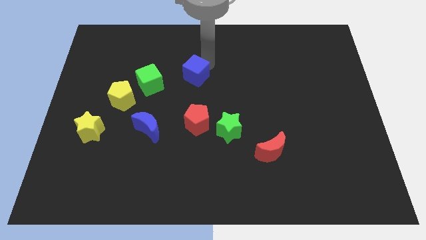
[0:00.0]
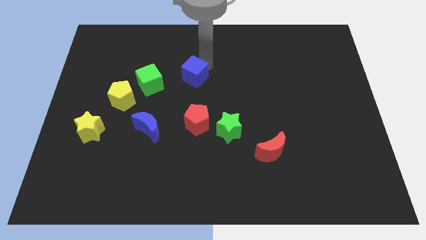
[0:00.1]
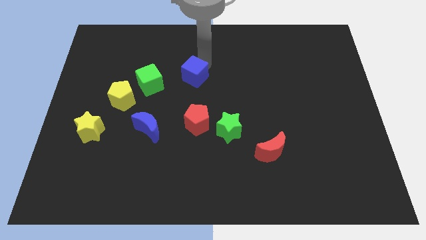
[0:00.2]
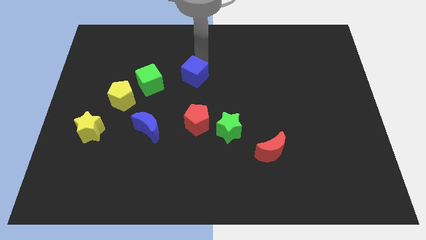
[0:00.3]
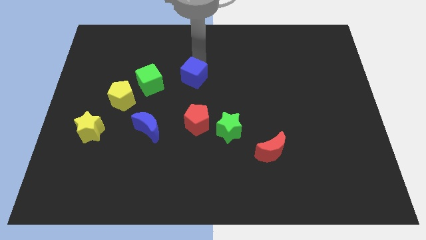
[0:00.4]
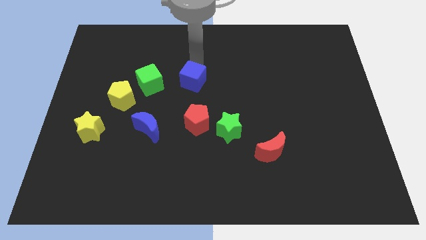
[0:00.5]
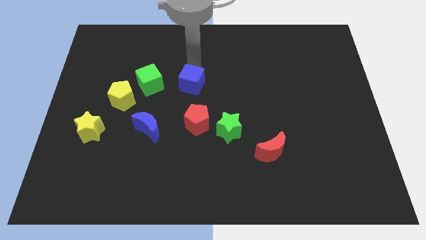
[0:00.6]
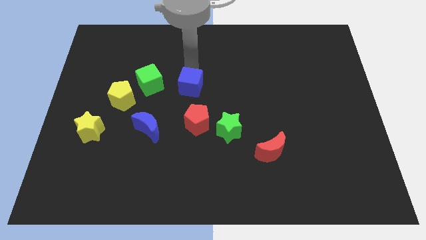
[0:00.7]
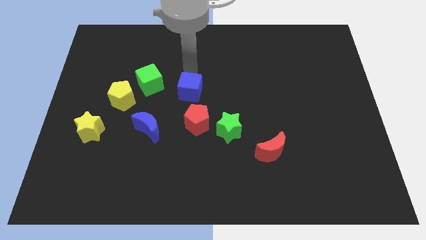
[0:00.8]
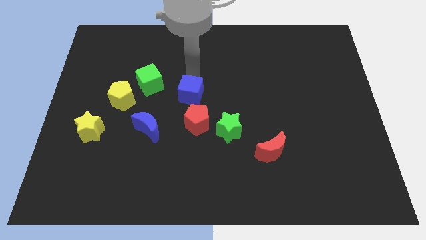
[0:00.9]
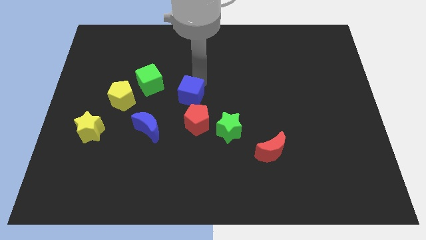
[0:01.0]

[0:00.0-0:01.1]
slightly move the blue cube towards bottom

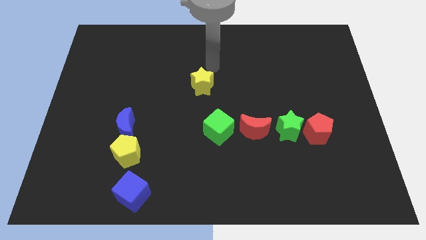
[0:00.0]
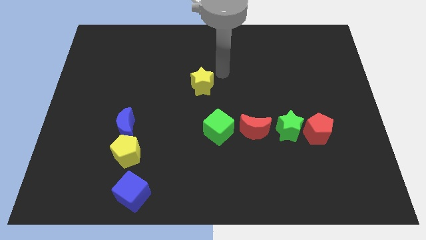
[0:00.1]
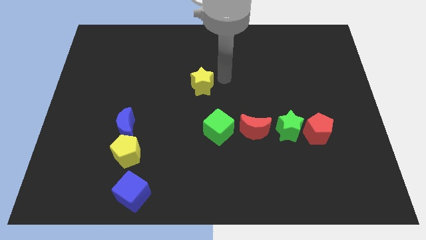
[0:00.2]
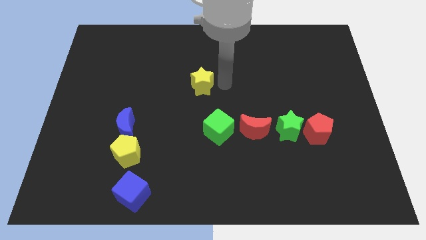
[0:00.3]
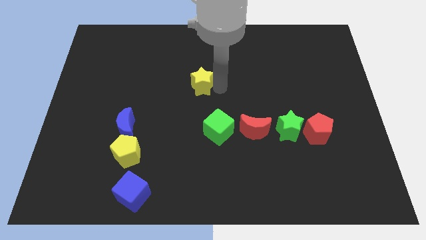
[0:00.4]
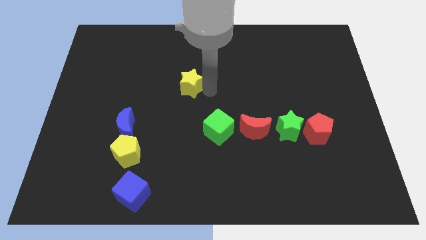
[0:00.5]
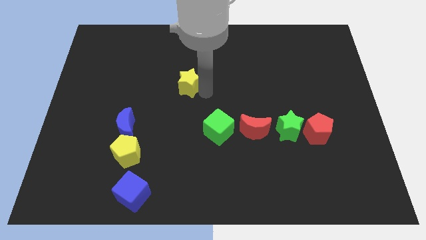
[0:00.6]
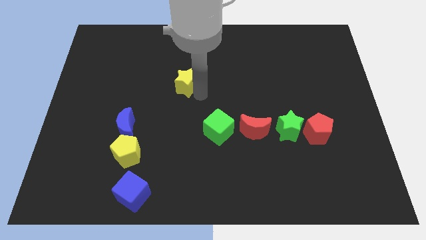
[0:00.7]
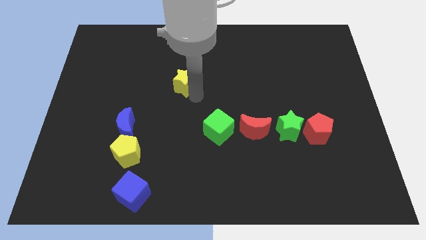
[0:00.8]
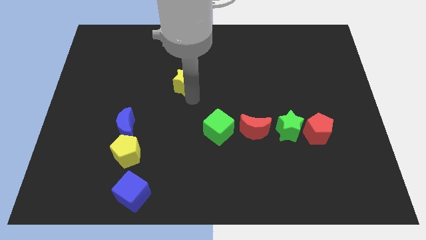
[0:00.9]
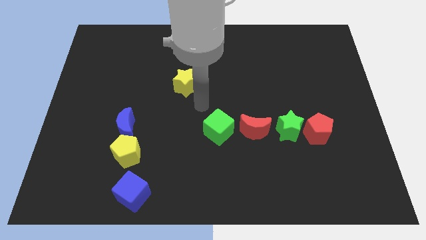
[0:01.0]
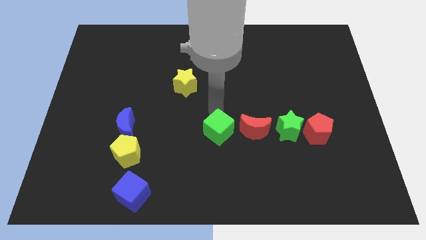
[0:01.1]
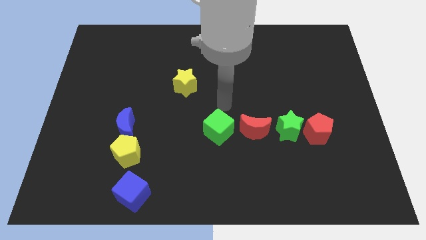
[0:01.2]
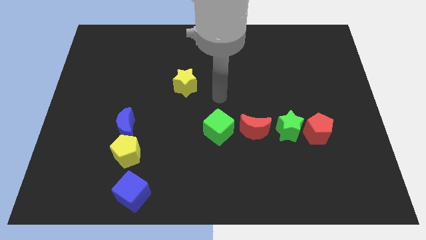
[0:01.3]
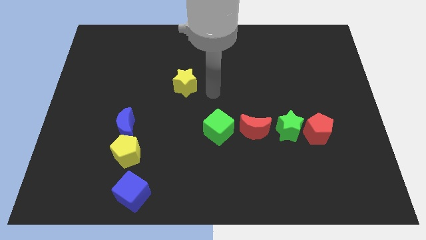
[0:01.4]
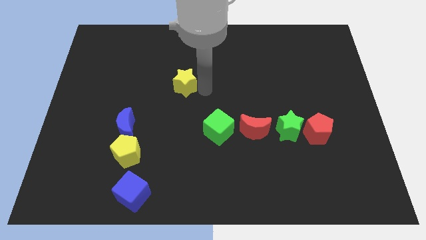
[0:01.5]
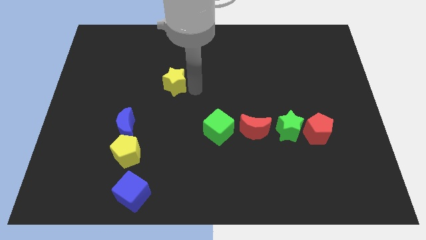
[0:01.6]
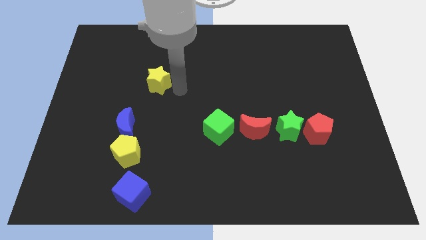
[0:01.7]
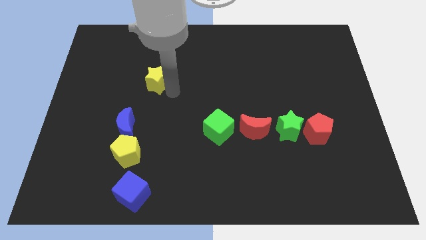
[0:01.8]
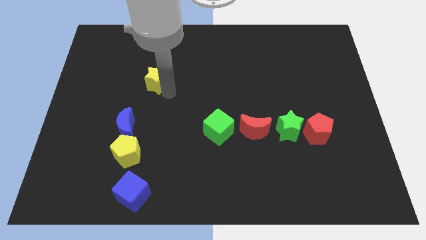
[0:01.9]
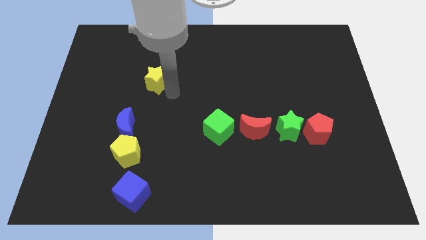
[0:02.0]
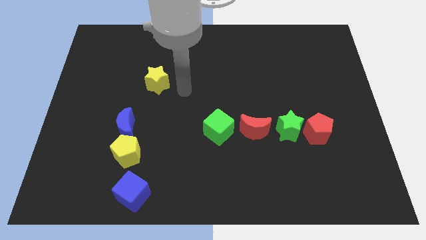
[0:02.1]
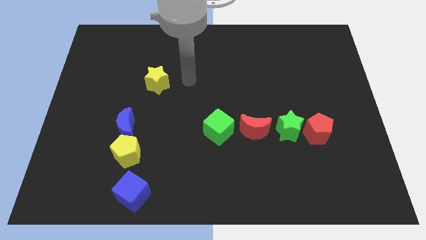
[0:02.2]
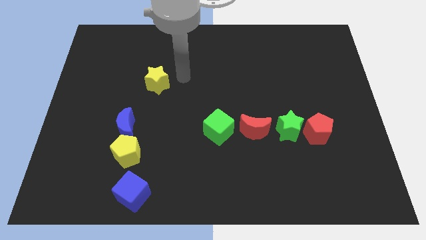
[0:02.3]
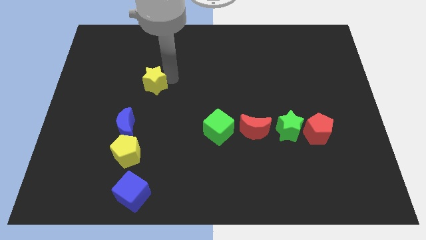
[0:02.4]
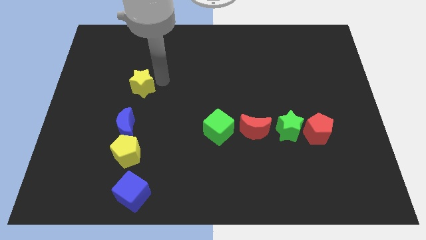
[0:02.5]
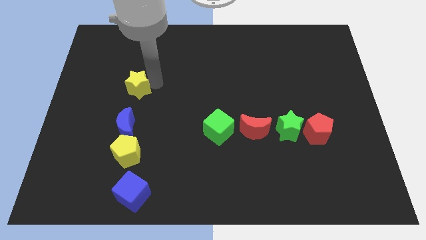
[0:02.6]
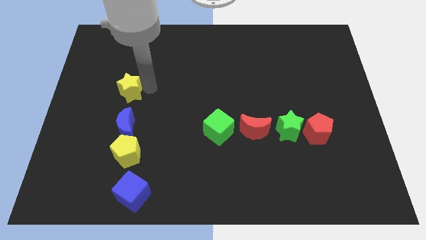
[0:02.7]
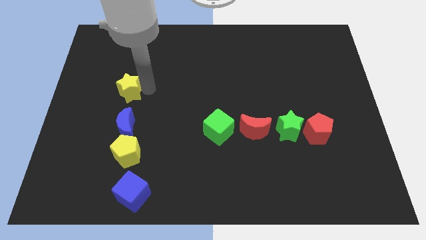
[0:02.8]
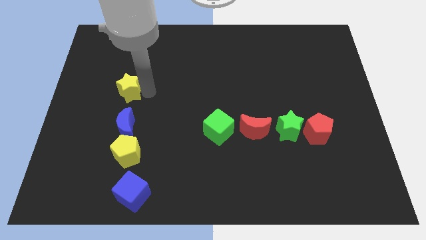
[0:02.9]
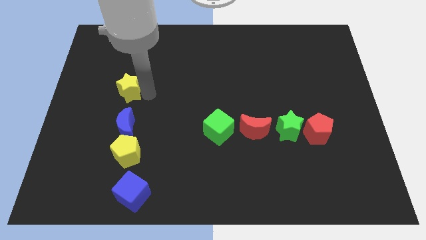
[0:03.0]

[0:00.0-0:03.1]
slide yellow star above blue moon

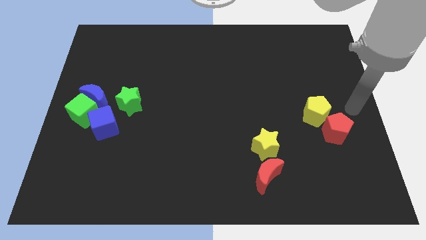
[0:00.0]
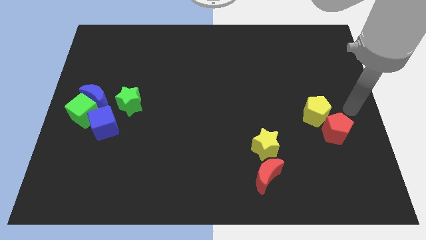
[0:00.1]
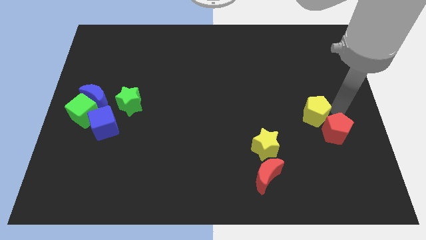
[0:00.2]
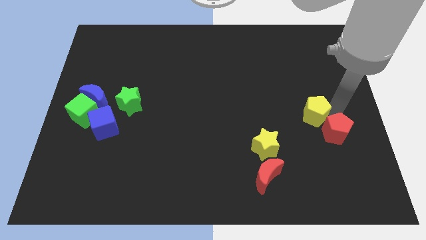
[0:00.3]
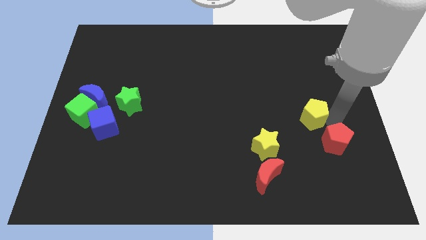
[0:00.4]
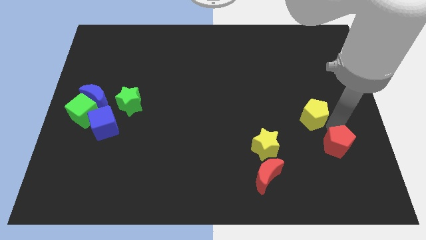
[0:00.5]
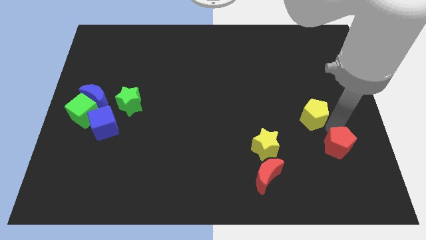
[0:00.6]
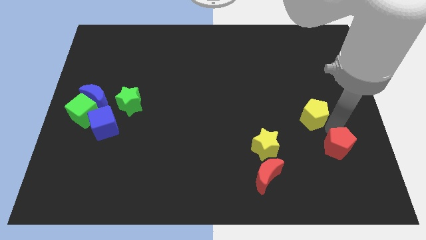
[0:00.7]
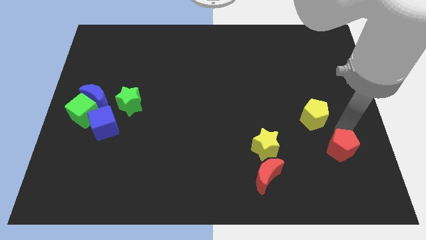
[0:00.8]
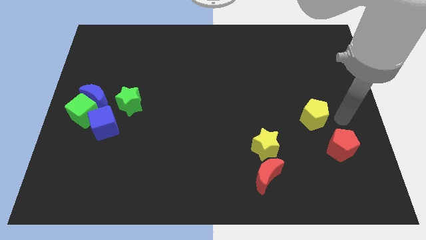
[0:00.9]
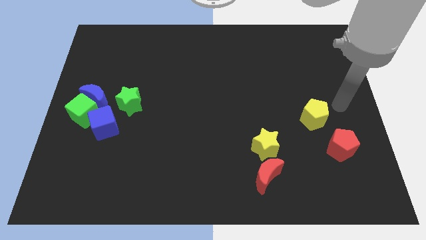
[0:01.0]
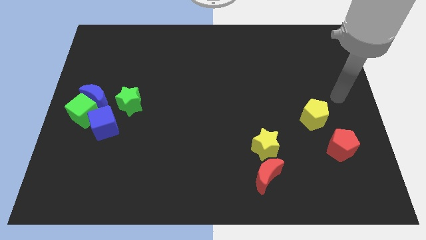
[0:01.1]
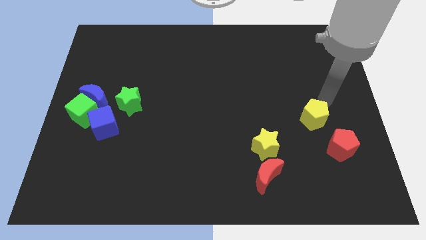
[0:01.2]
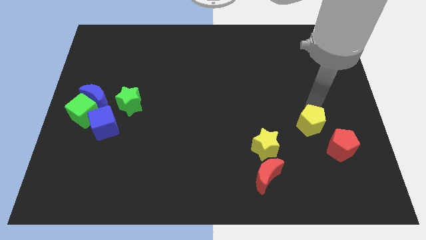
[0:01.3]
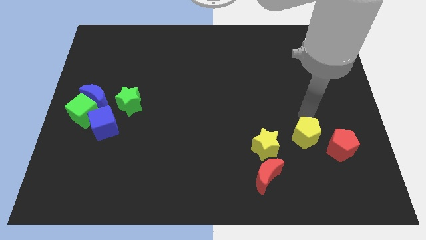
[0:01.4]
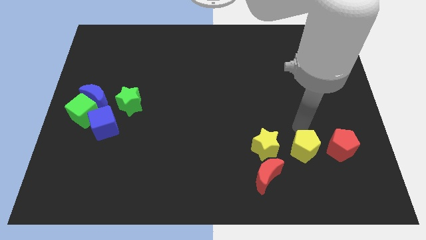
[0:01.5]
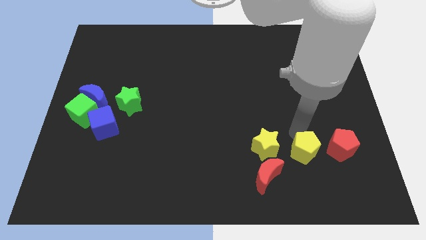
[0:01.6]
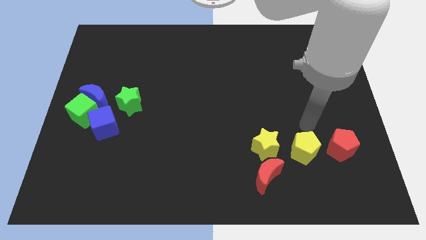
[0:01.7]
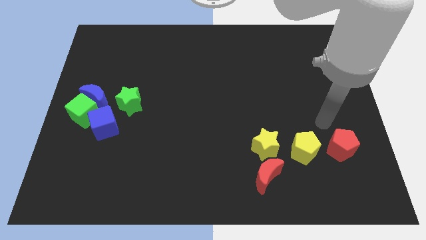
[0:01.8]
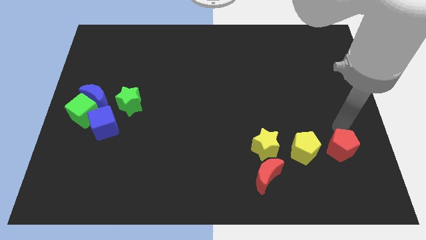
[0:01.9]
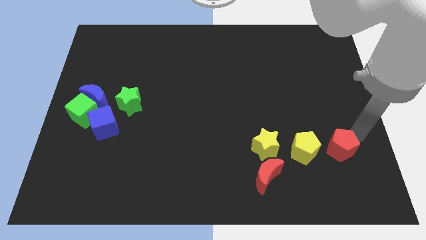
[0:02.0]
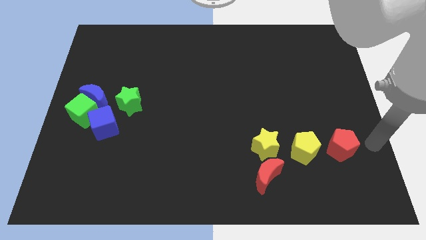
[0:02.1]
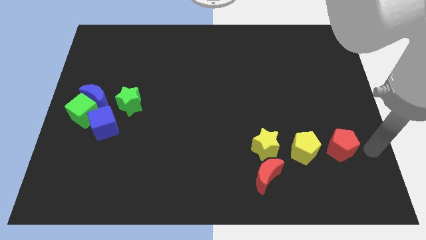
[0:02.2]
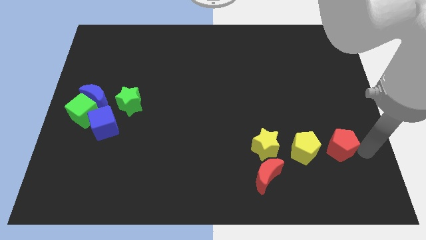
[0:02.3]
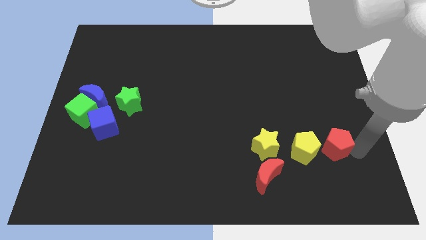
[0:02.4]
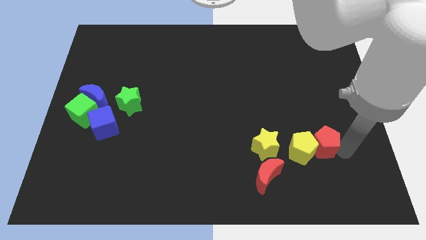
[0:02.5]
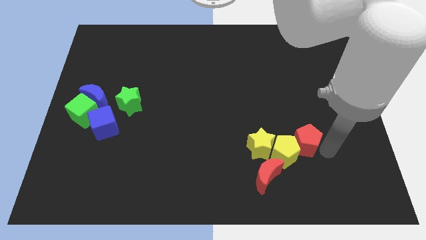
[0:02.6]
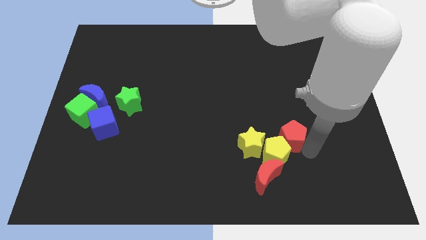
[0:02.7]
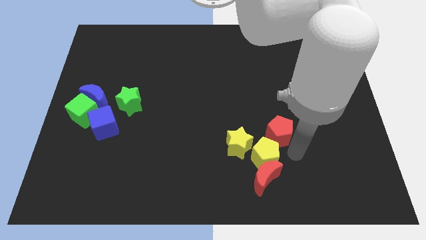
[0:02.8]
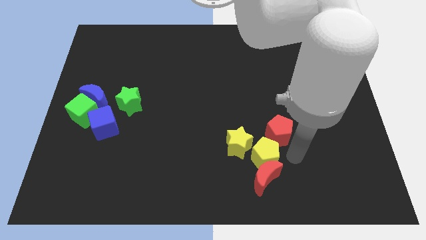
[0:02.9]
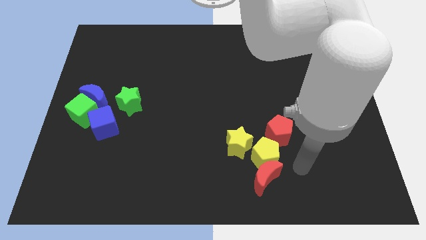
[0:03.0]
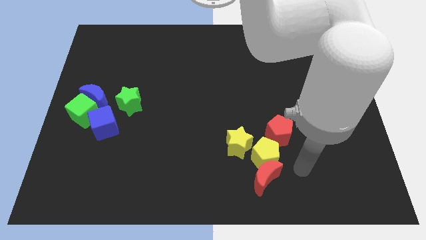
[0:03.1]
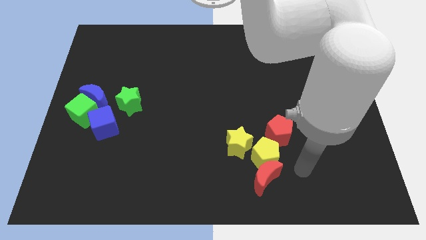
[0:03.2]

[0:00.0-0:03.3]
push the red pentagon above to the yellow pentagon

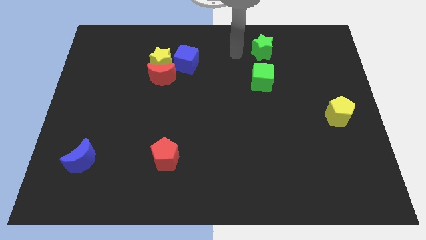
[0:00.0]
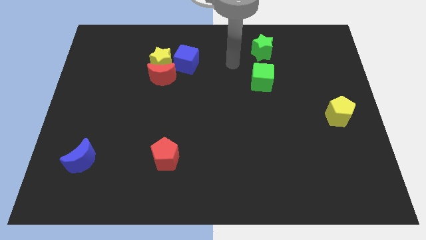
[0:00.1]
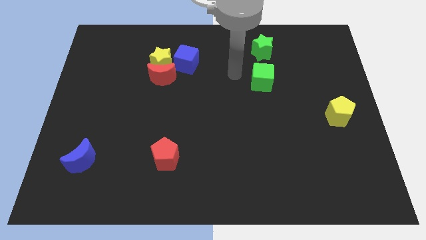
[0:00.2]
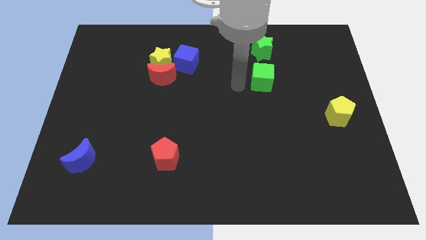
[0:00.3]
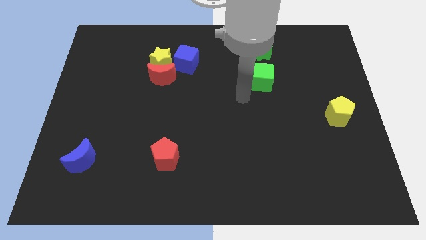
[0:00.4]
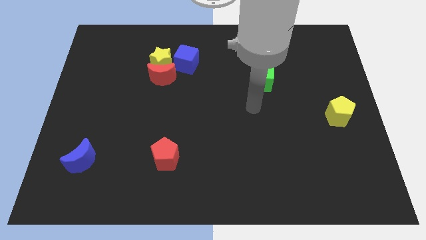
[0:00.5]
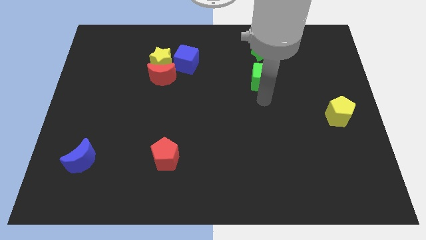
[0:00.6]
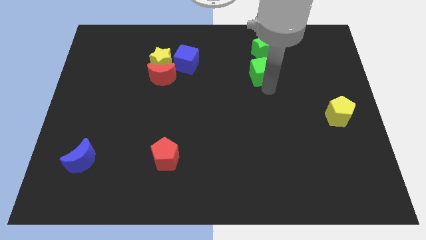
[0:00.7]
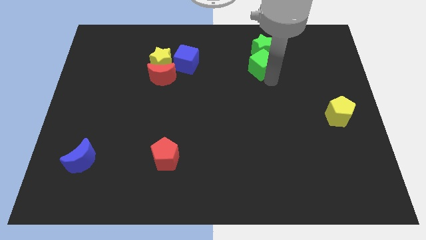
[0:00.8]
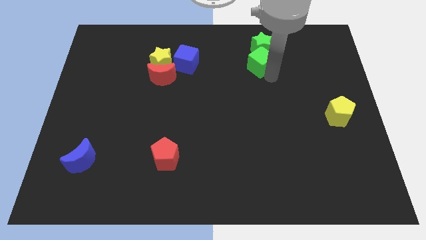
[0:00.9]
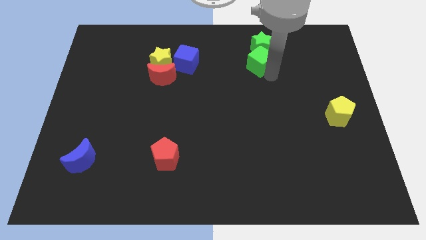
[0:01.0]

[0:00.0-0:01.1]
push green cube into green star

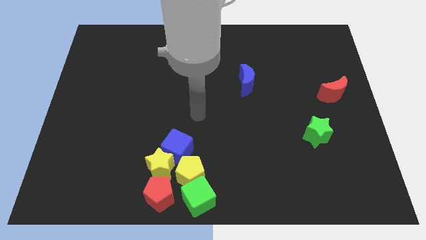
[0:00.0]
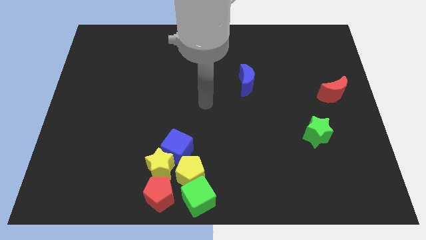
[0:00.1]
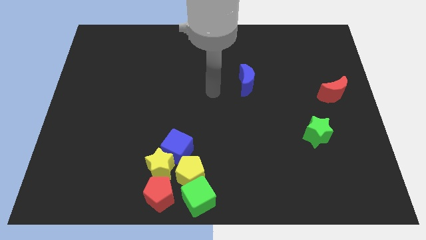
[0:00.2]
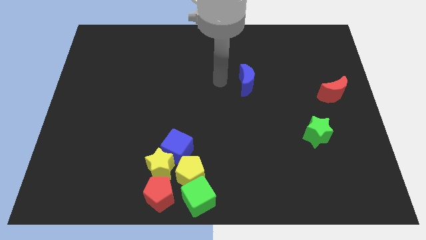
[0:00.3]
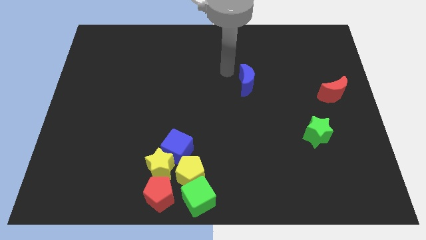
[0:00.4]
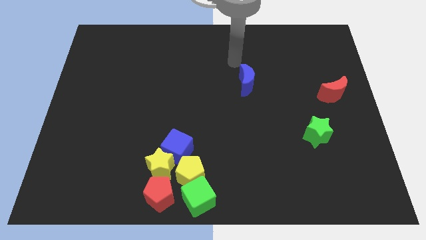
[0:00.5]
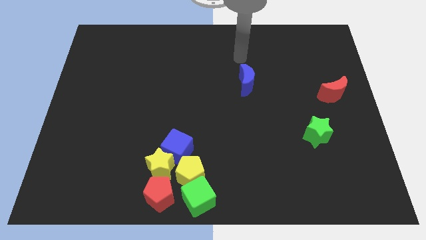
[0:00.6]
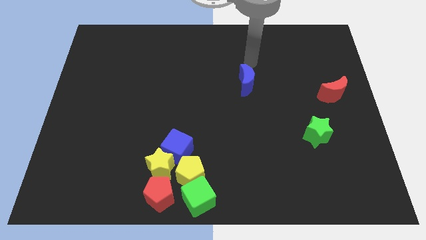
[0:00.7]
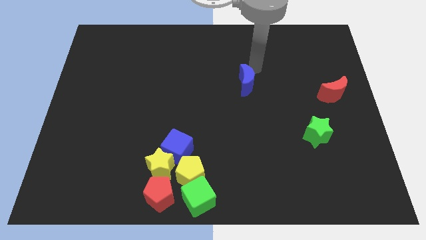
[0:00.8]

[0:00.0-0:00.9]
place your arm at the top of the blue moon
